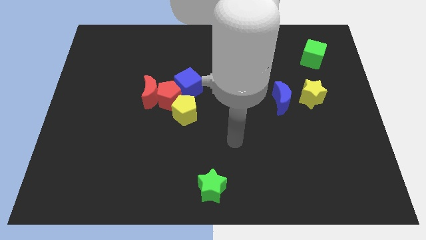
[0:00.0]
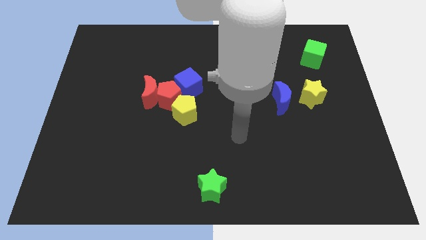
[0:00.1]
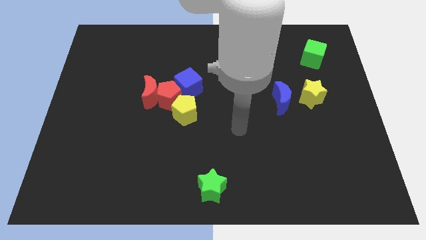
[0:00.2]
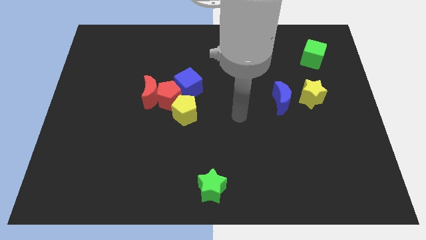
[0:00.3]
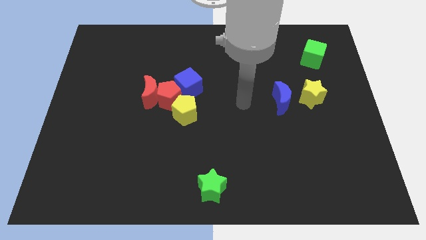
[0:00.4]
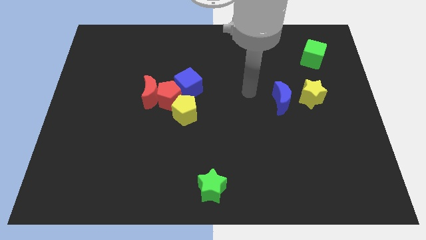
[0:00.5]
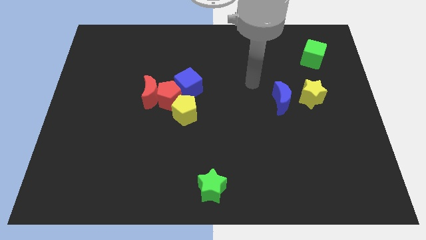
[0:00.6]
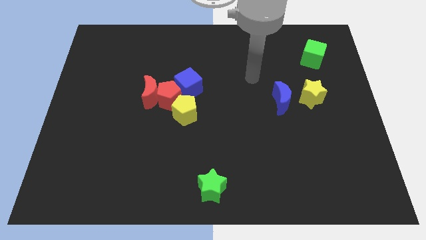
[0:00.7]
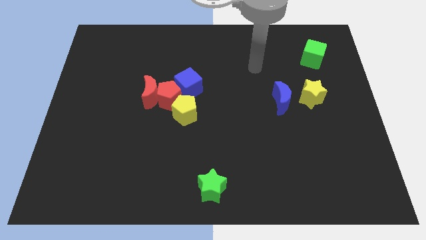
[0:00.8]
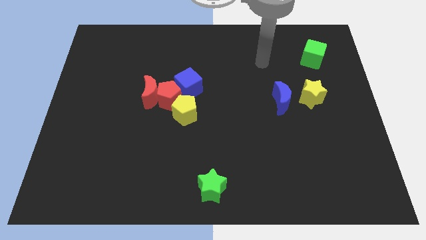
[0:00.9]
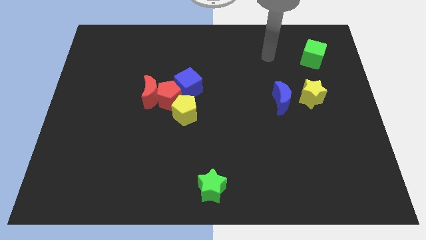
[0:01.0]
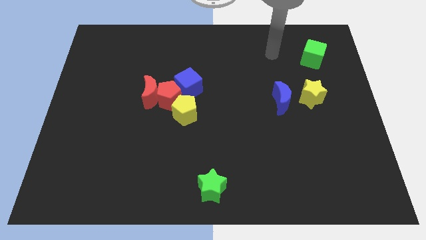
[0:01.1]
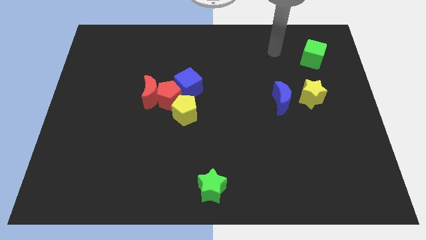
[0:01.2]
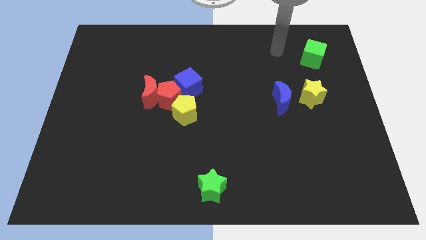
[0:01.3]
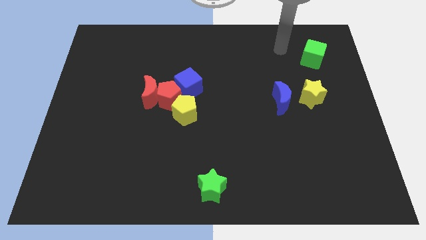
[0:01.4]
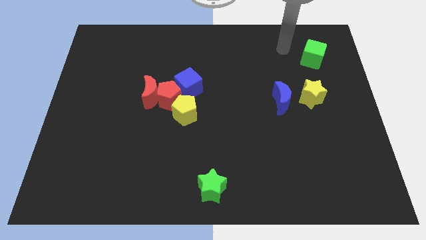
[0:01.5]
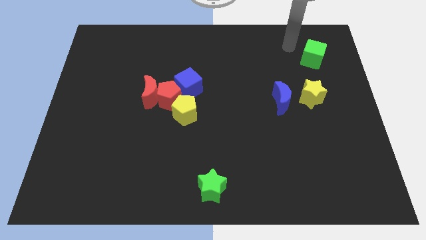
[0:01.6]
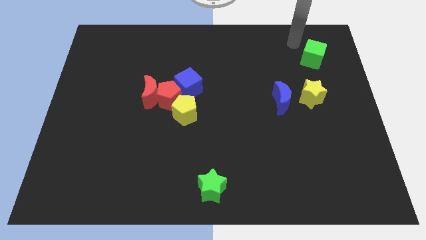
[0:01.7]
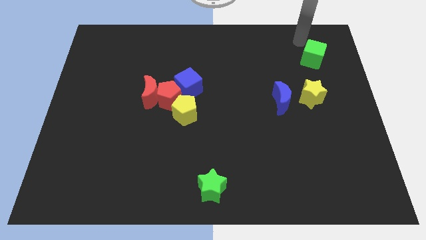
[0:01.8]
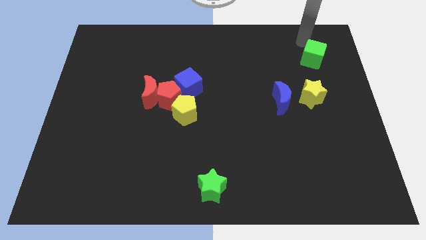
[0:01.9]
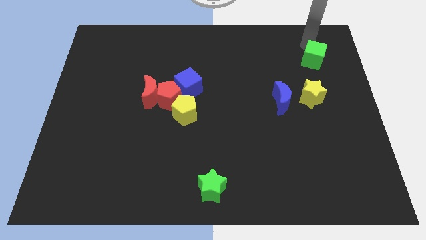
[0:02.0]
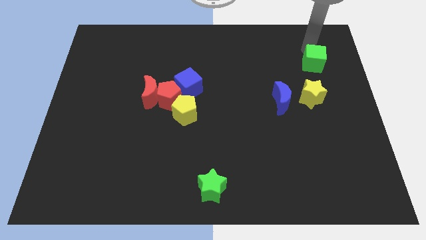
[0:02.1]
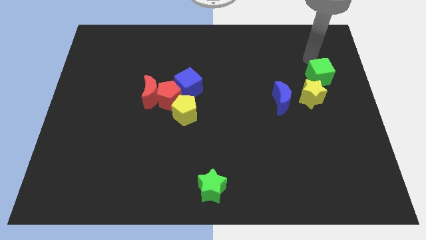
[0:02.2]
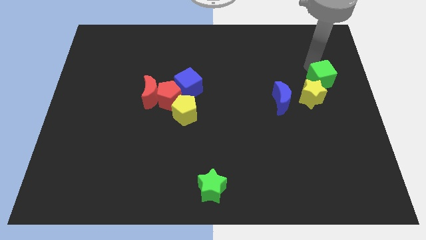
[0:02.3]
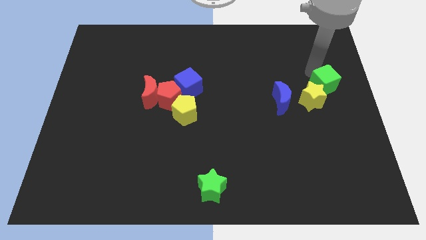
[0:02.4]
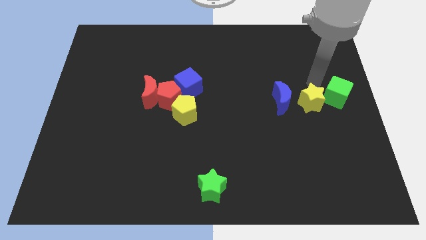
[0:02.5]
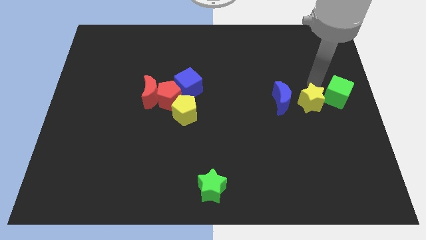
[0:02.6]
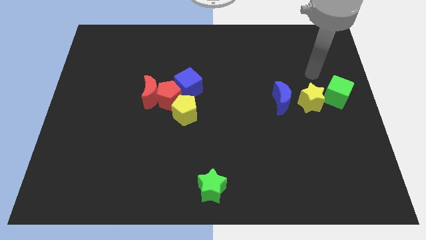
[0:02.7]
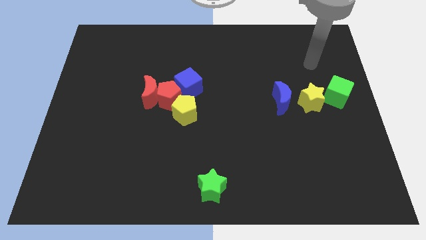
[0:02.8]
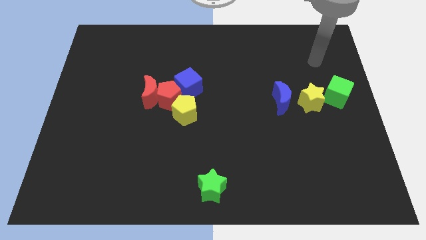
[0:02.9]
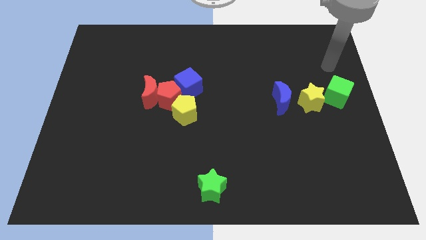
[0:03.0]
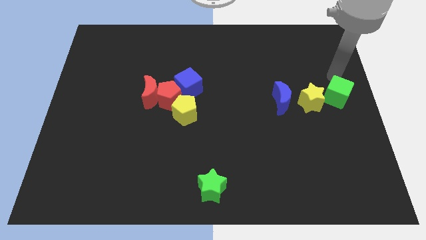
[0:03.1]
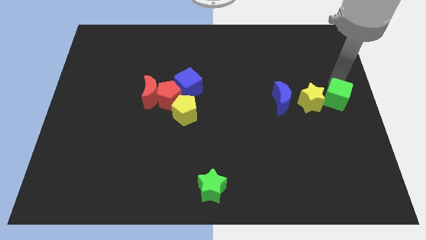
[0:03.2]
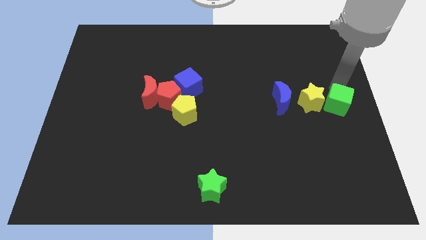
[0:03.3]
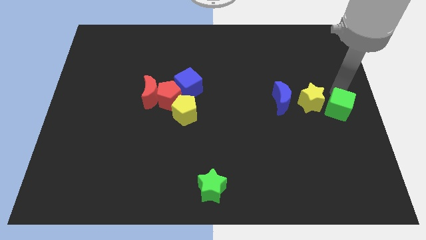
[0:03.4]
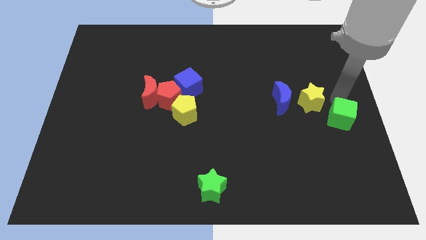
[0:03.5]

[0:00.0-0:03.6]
push the green cube into the yellow star

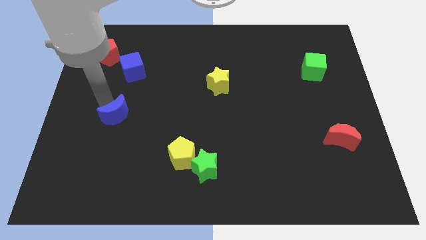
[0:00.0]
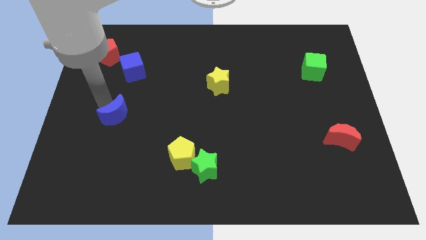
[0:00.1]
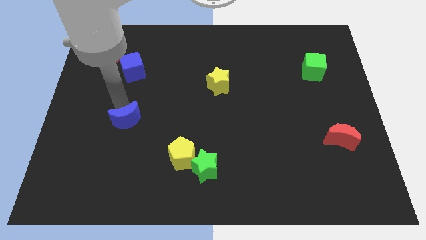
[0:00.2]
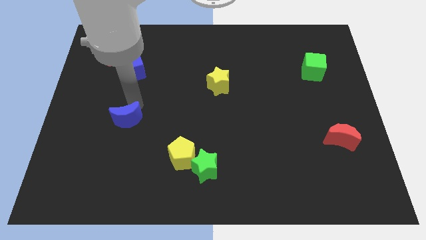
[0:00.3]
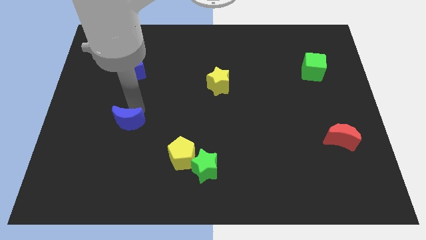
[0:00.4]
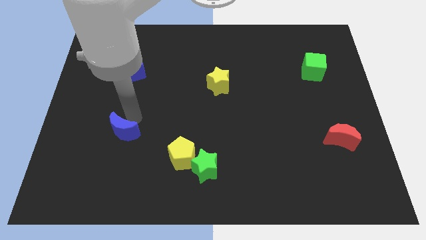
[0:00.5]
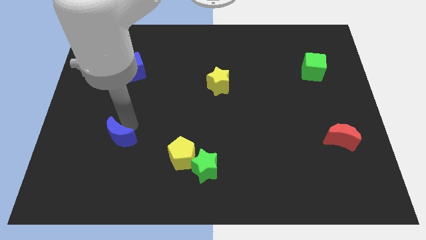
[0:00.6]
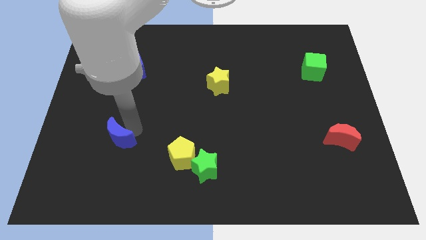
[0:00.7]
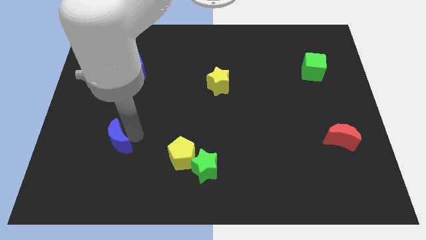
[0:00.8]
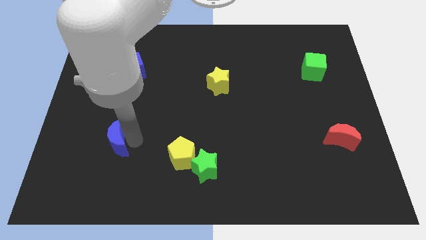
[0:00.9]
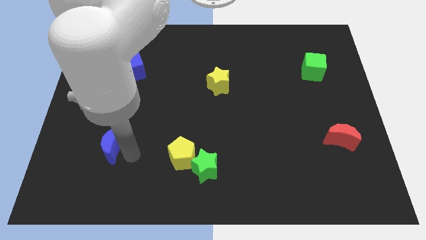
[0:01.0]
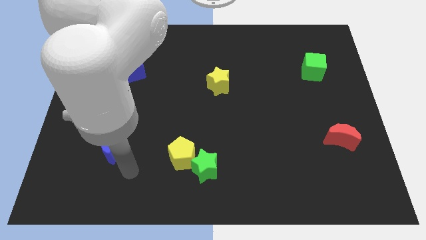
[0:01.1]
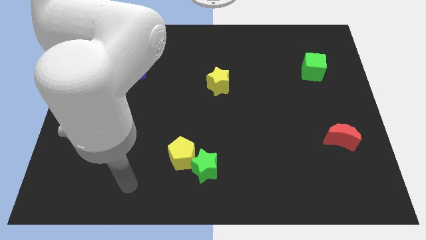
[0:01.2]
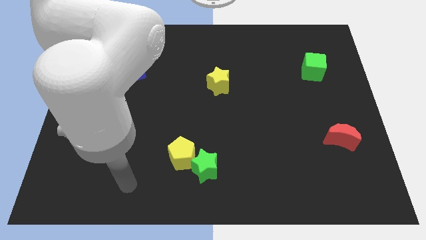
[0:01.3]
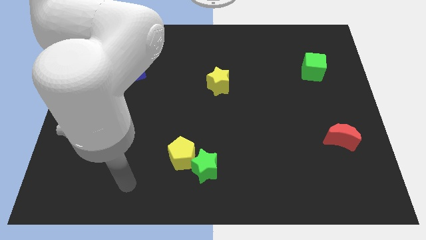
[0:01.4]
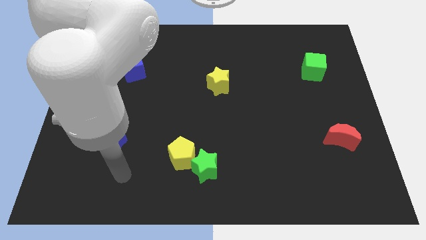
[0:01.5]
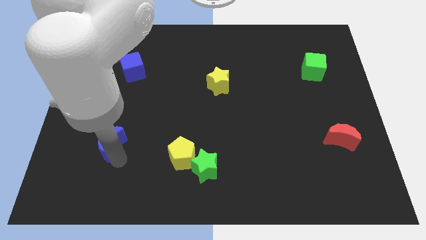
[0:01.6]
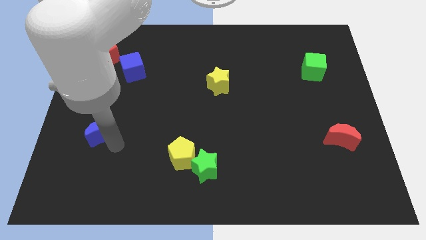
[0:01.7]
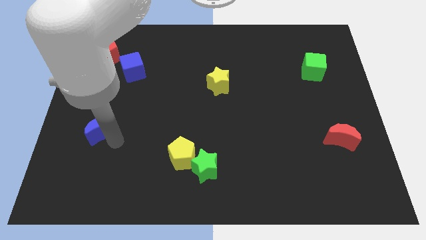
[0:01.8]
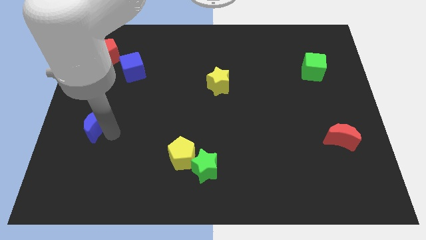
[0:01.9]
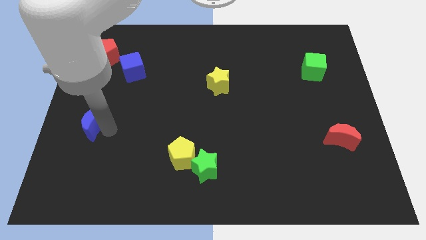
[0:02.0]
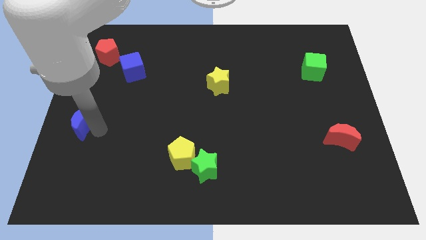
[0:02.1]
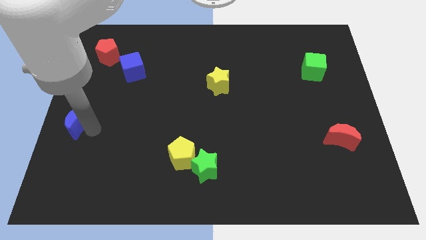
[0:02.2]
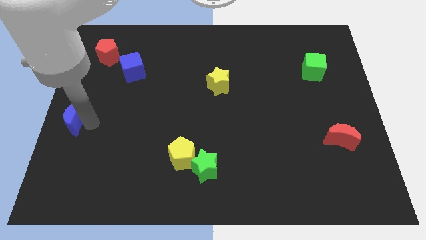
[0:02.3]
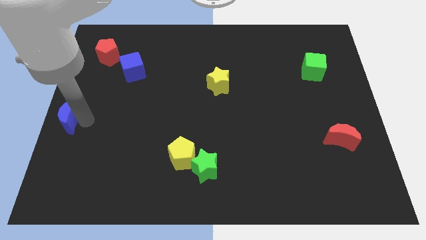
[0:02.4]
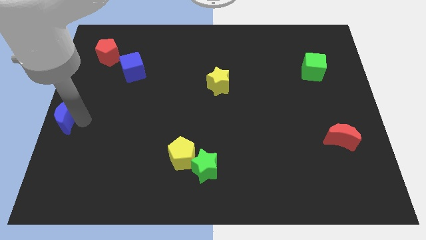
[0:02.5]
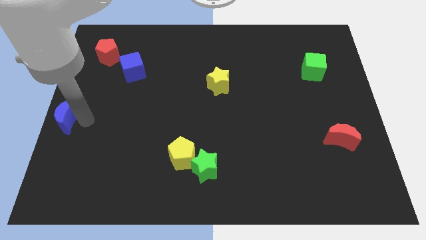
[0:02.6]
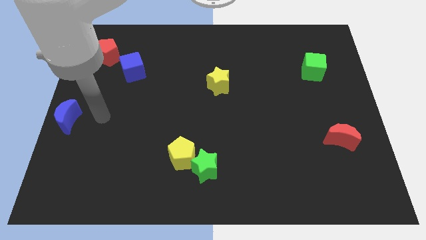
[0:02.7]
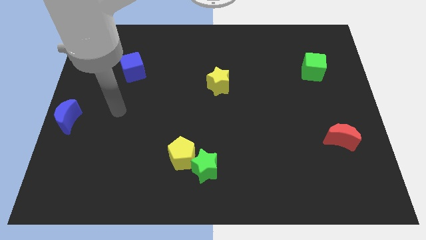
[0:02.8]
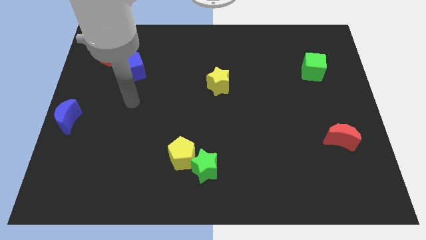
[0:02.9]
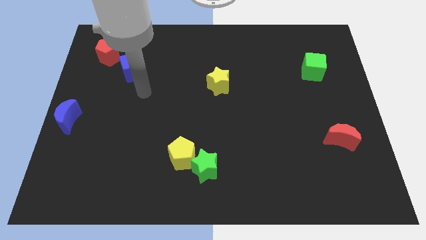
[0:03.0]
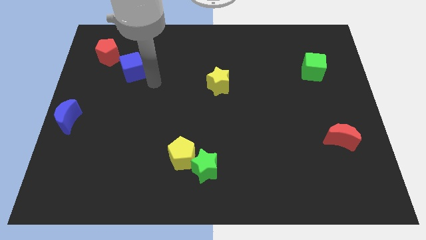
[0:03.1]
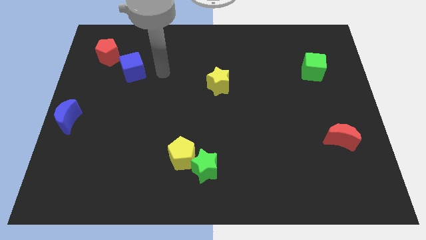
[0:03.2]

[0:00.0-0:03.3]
move the blue crescent to the centre left of the board

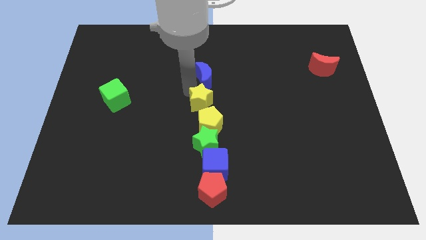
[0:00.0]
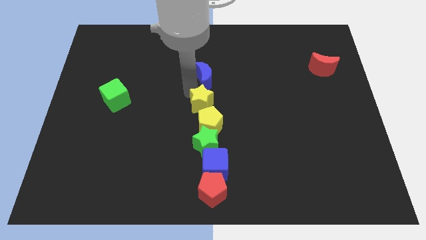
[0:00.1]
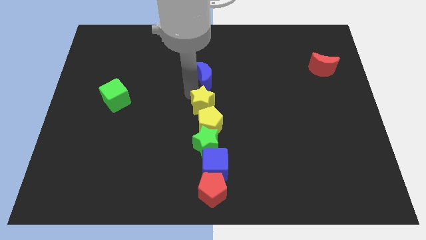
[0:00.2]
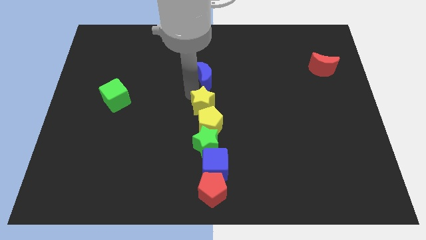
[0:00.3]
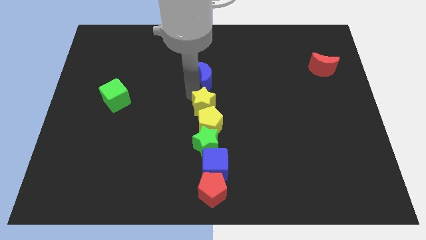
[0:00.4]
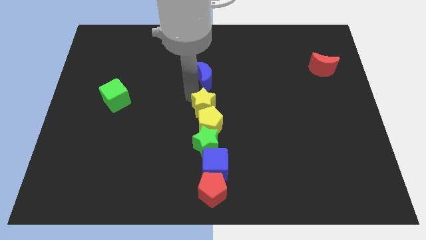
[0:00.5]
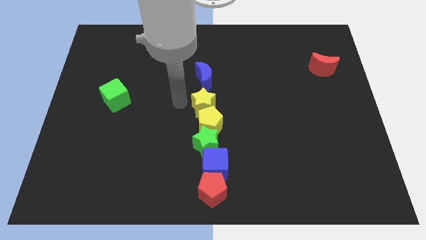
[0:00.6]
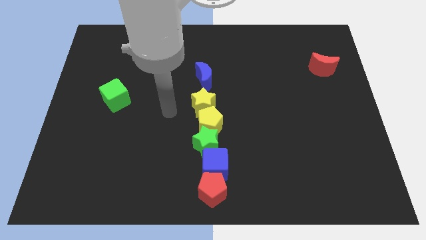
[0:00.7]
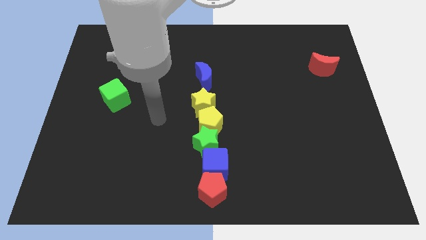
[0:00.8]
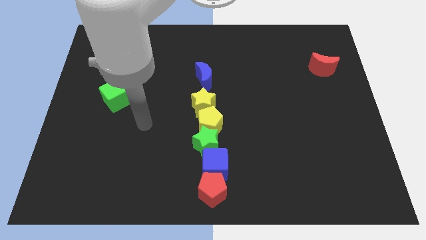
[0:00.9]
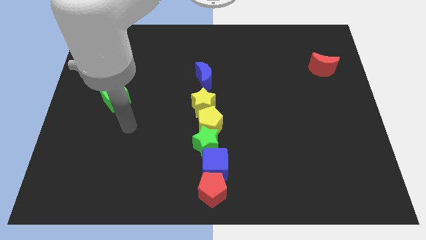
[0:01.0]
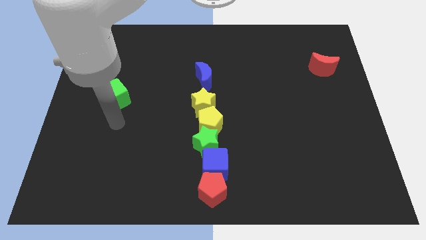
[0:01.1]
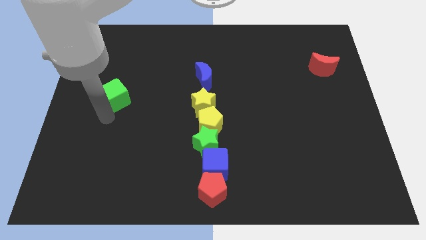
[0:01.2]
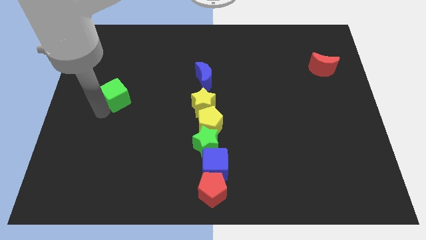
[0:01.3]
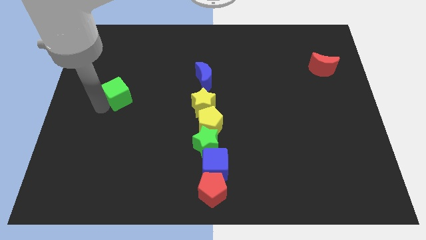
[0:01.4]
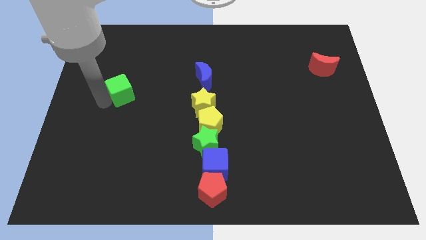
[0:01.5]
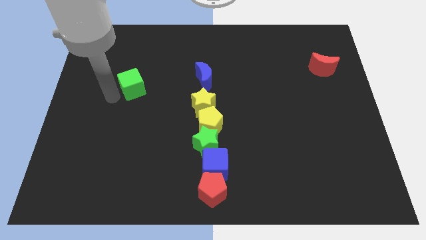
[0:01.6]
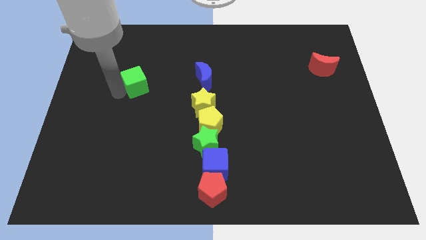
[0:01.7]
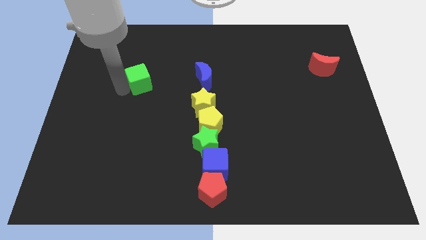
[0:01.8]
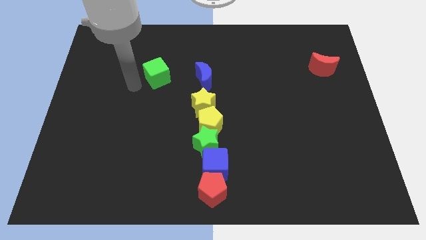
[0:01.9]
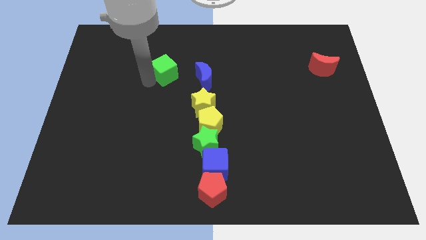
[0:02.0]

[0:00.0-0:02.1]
push the green cube towards right side

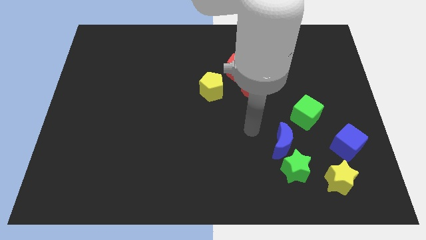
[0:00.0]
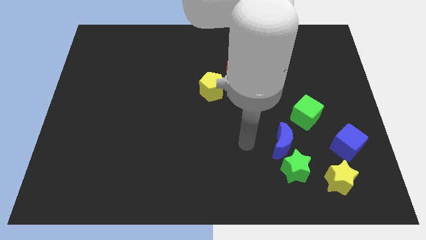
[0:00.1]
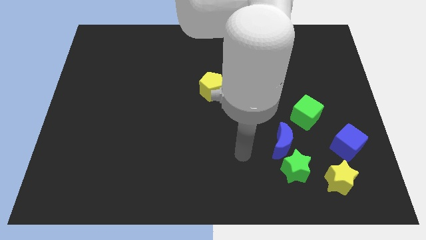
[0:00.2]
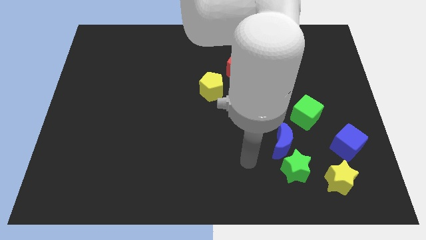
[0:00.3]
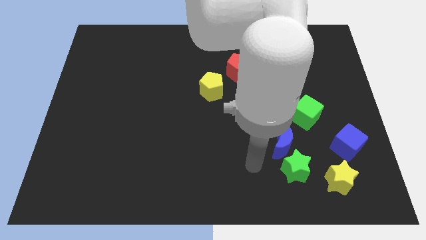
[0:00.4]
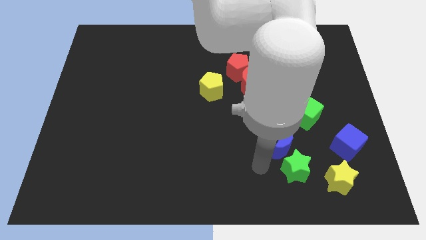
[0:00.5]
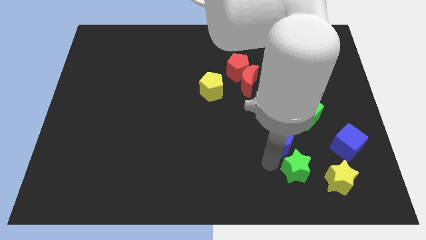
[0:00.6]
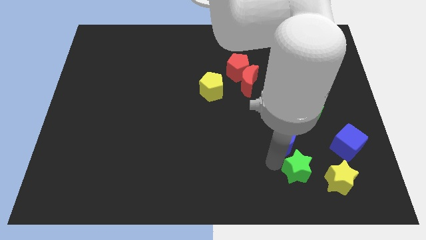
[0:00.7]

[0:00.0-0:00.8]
move arm to the left of green star
